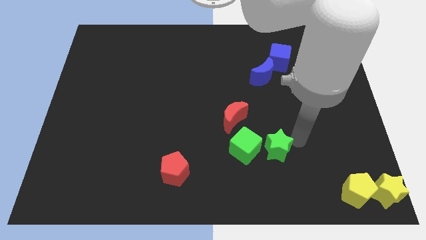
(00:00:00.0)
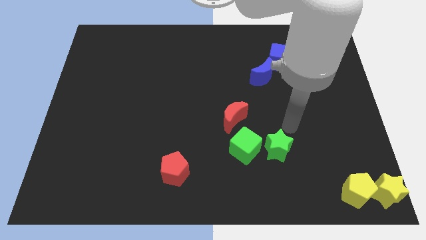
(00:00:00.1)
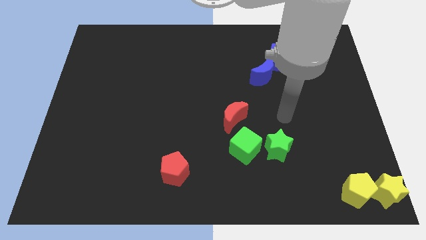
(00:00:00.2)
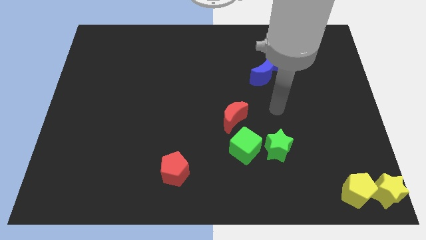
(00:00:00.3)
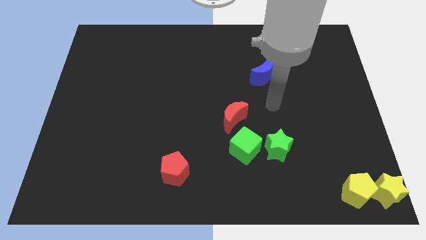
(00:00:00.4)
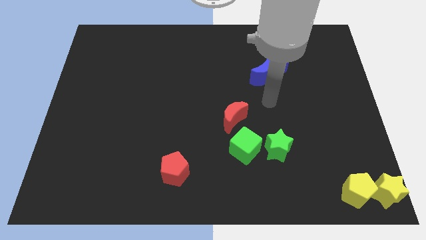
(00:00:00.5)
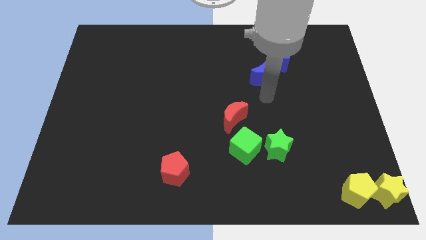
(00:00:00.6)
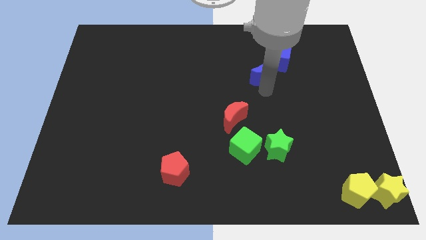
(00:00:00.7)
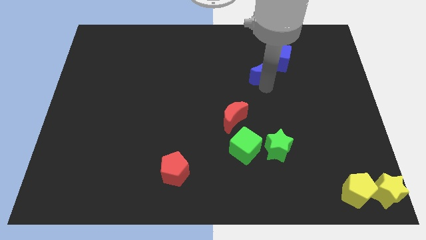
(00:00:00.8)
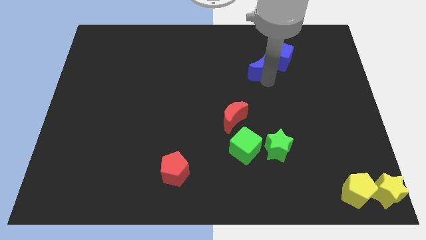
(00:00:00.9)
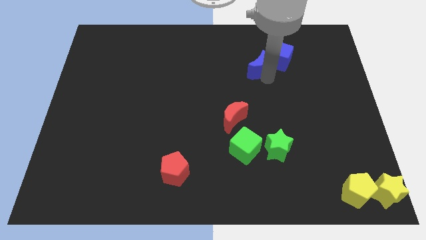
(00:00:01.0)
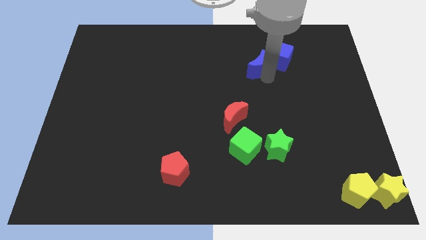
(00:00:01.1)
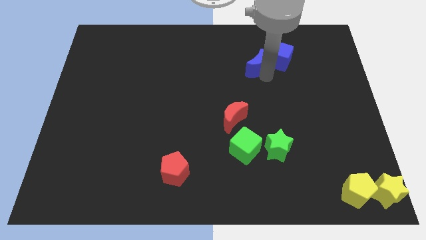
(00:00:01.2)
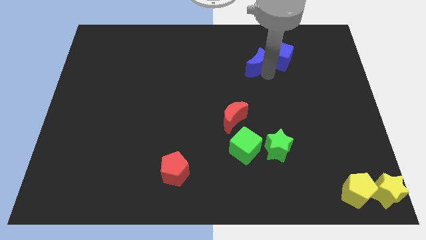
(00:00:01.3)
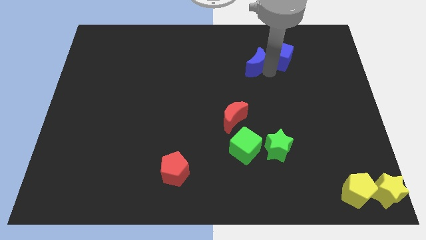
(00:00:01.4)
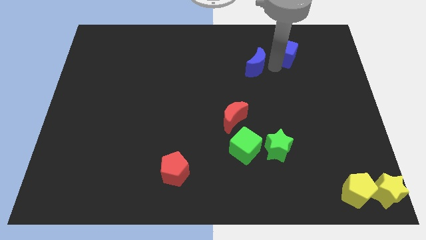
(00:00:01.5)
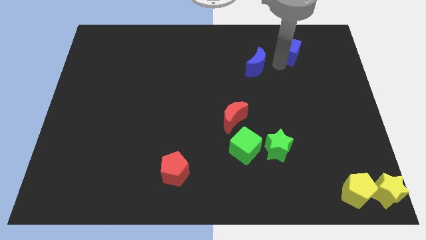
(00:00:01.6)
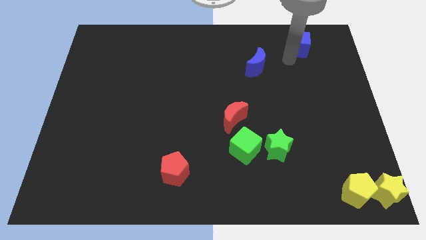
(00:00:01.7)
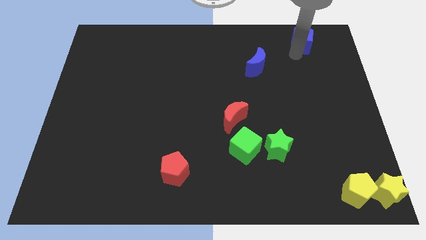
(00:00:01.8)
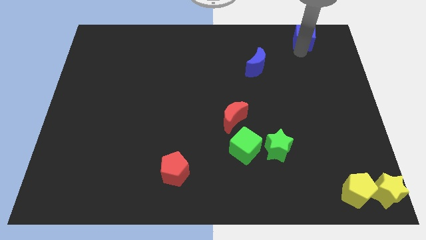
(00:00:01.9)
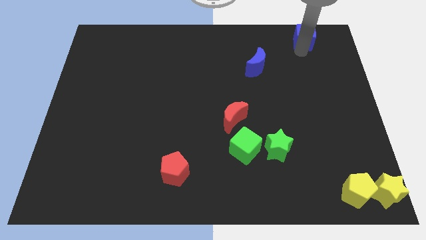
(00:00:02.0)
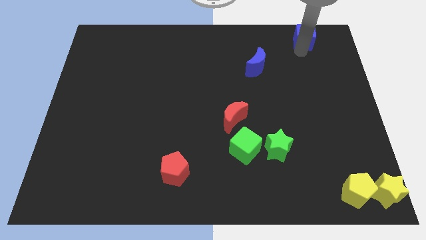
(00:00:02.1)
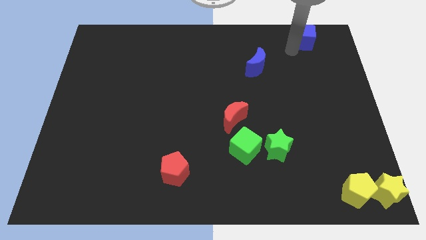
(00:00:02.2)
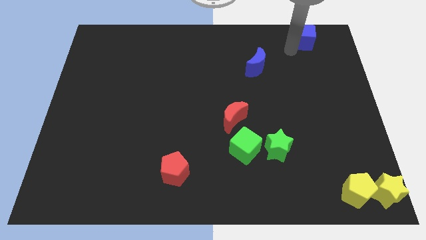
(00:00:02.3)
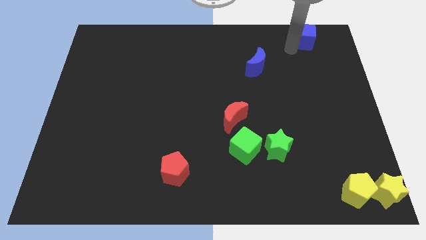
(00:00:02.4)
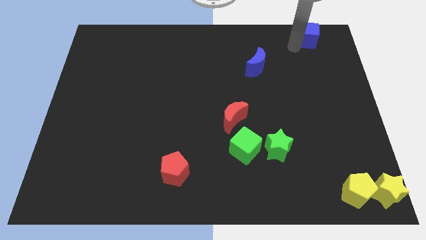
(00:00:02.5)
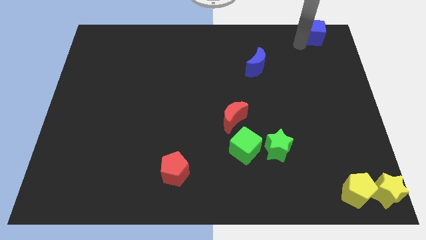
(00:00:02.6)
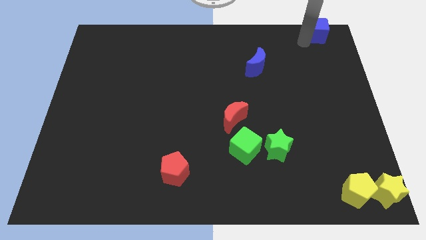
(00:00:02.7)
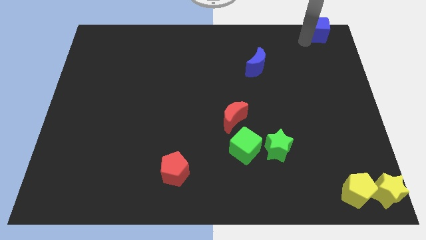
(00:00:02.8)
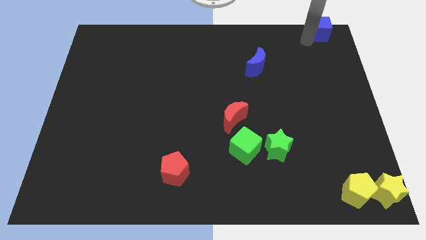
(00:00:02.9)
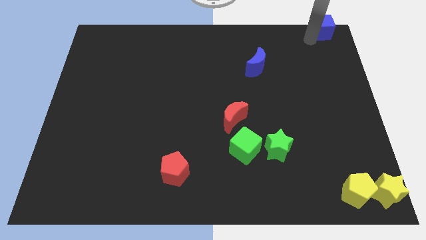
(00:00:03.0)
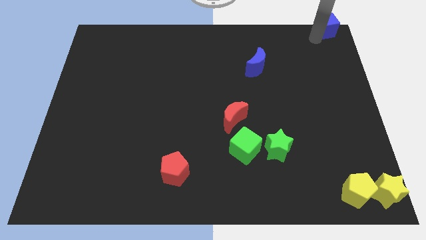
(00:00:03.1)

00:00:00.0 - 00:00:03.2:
slide blue cube to the top right of the board

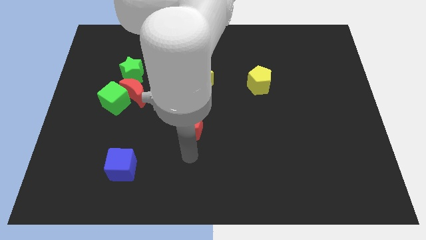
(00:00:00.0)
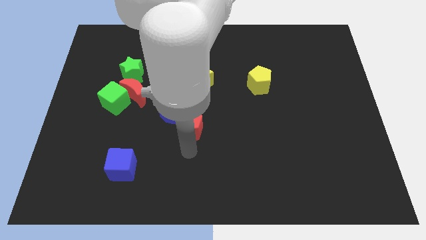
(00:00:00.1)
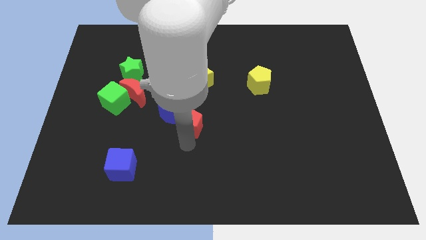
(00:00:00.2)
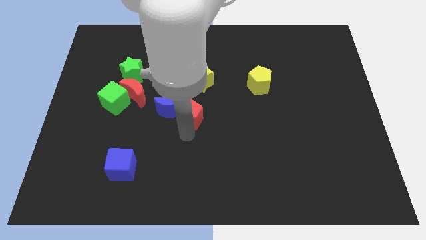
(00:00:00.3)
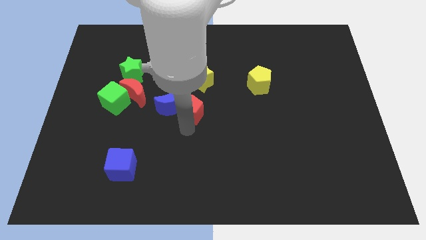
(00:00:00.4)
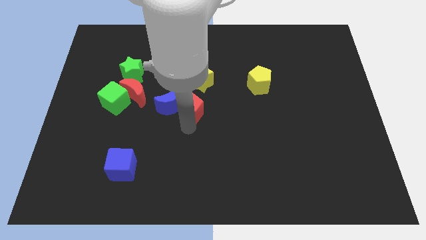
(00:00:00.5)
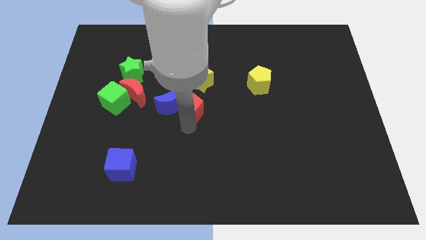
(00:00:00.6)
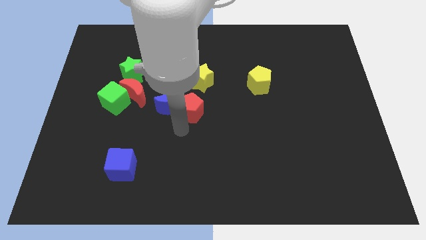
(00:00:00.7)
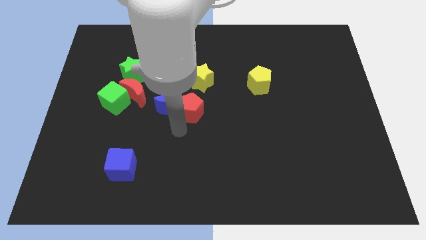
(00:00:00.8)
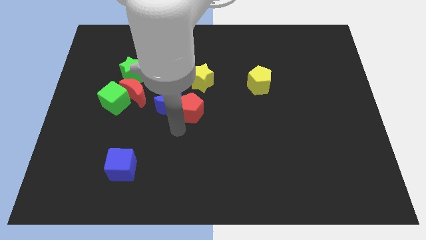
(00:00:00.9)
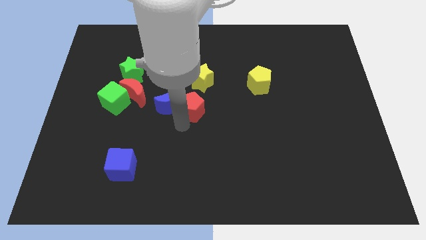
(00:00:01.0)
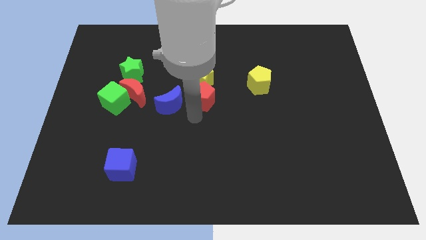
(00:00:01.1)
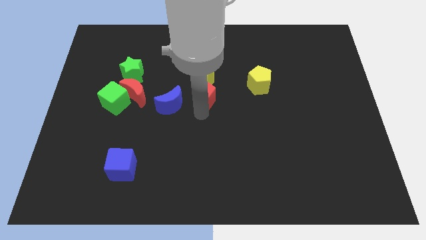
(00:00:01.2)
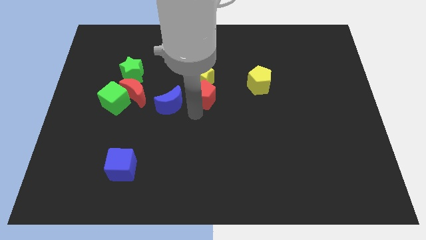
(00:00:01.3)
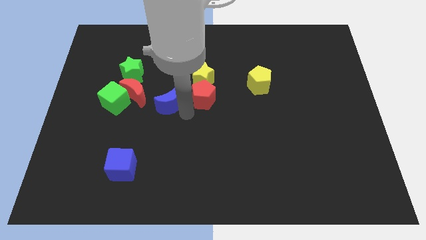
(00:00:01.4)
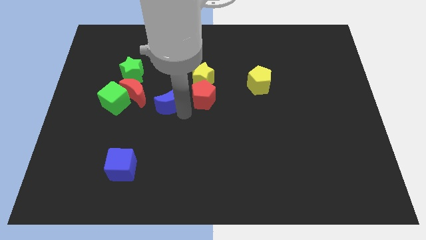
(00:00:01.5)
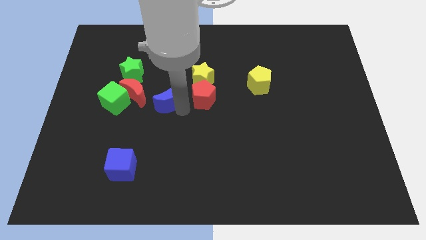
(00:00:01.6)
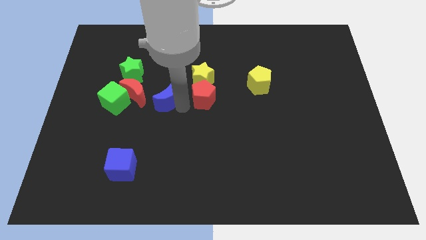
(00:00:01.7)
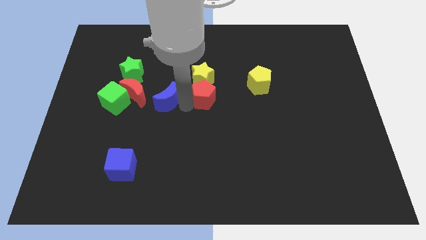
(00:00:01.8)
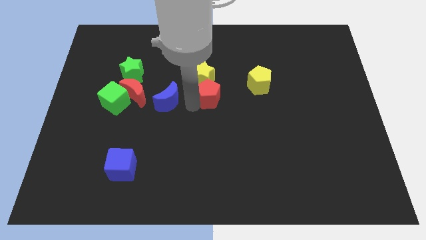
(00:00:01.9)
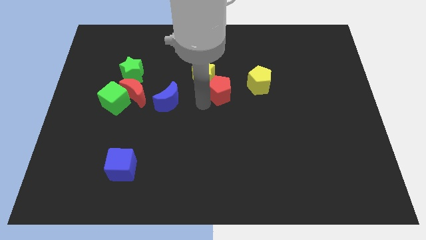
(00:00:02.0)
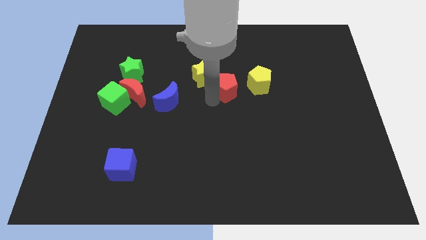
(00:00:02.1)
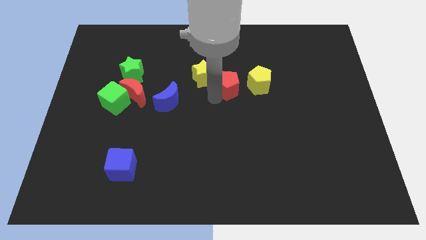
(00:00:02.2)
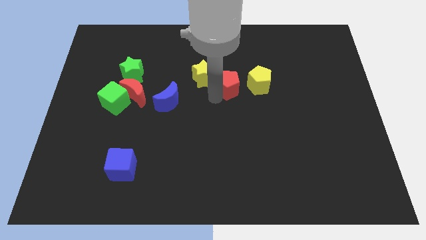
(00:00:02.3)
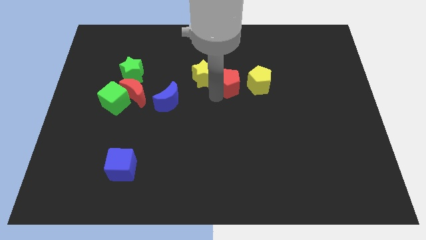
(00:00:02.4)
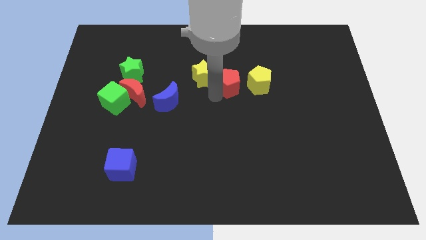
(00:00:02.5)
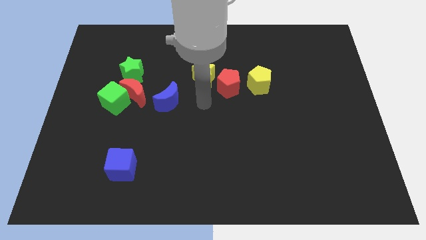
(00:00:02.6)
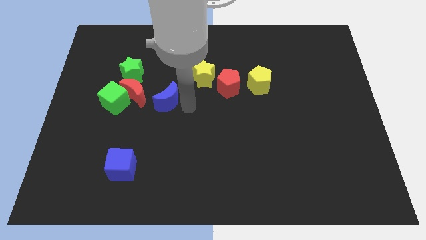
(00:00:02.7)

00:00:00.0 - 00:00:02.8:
place the red pentagon in between the yellow blocks

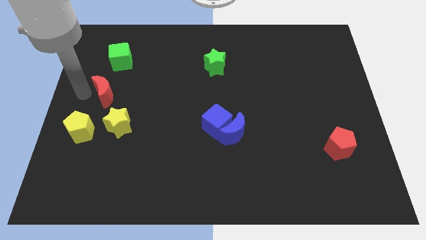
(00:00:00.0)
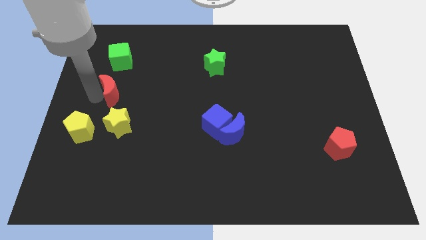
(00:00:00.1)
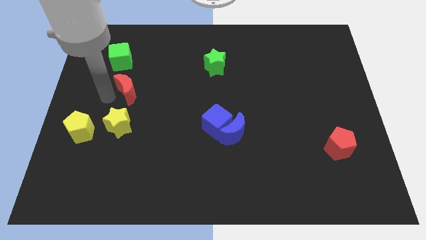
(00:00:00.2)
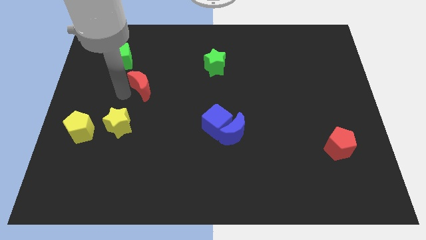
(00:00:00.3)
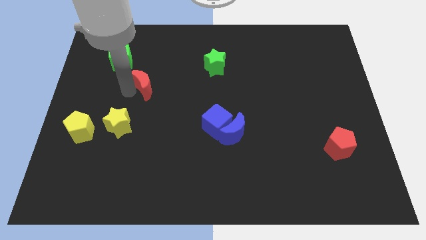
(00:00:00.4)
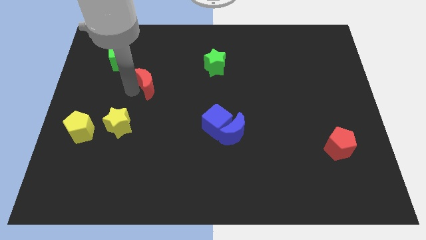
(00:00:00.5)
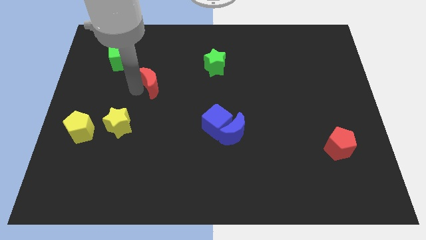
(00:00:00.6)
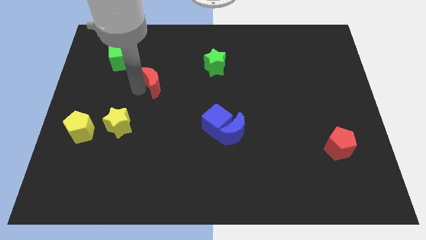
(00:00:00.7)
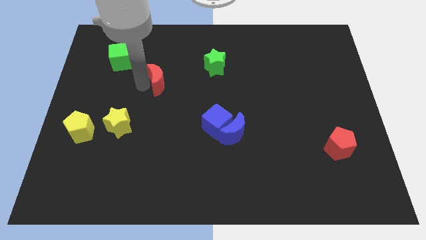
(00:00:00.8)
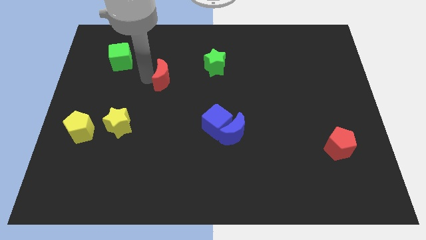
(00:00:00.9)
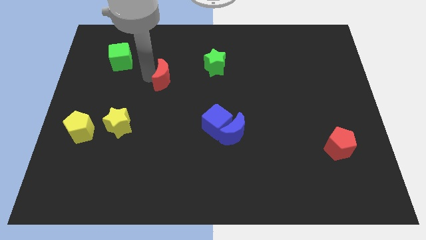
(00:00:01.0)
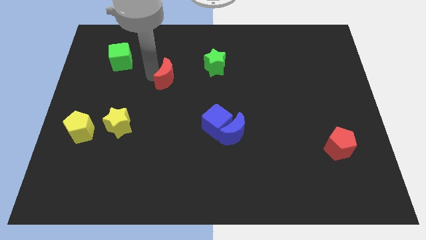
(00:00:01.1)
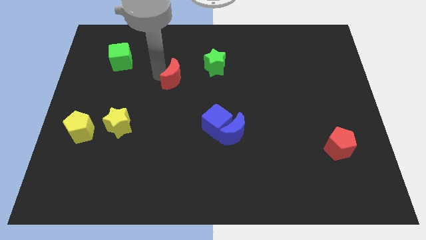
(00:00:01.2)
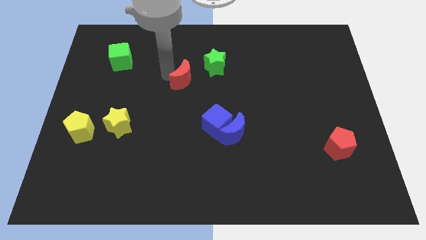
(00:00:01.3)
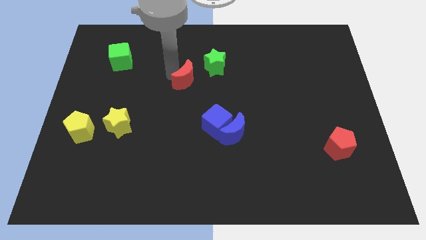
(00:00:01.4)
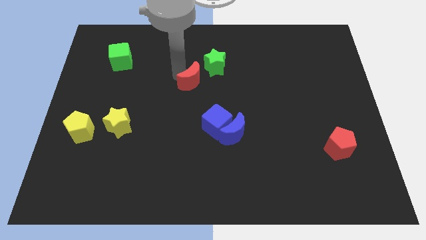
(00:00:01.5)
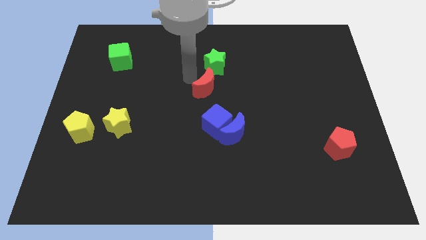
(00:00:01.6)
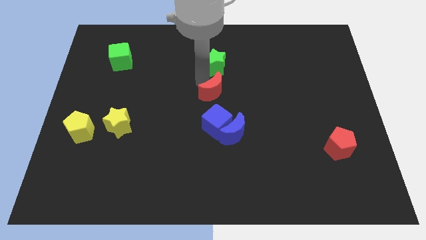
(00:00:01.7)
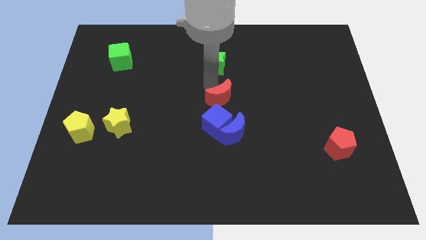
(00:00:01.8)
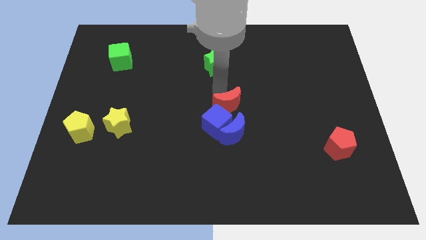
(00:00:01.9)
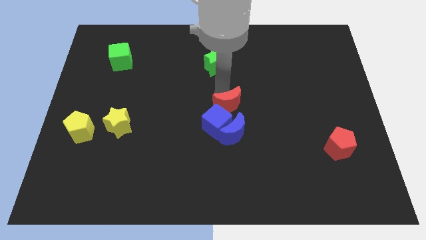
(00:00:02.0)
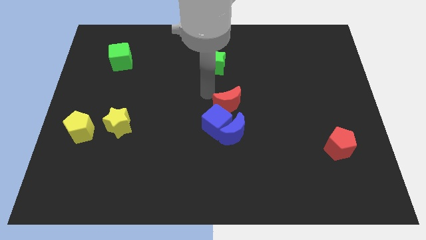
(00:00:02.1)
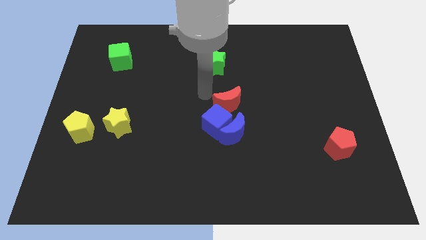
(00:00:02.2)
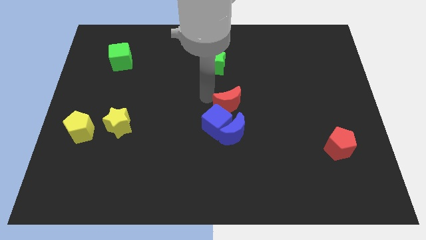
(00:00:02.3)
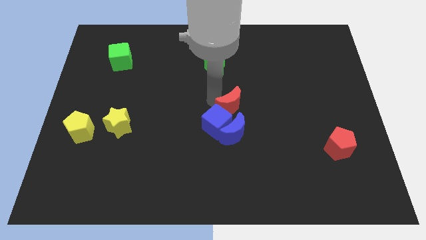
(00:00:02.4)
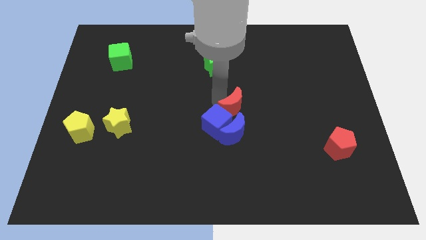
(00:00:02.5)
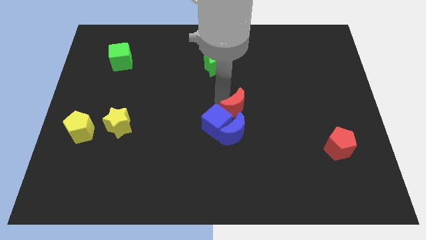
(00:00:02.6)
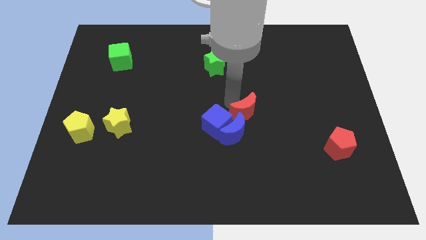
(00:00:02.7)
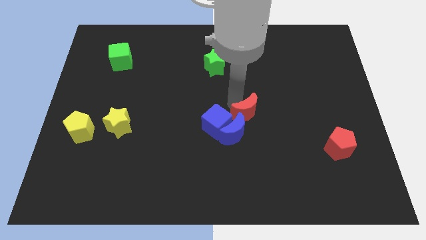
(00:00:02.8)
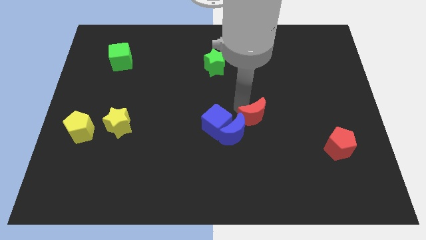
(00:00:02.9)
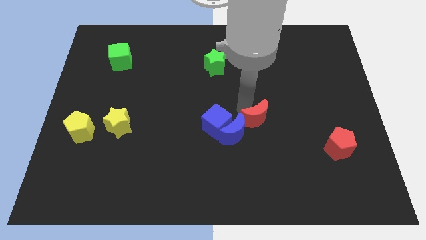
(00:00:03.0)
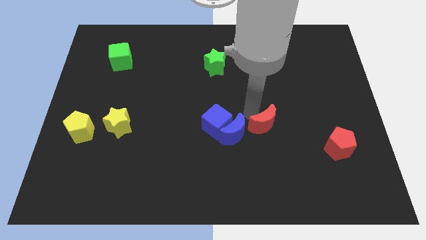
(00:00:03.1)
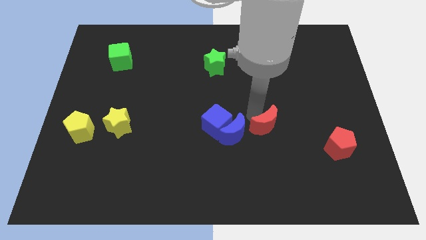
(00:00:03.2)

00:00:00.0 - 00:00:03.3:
move the red crescent to the right of the blue crescent
